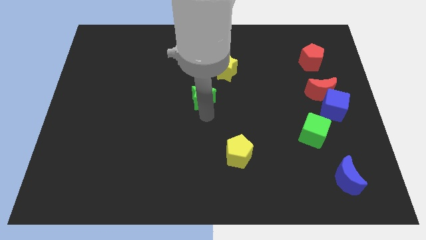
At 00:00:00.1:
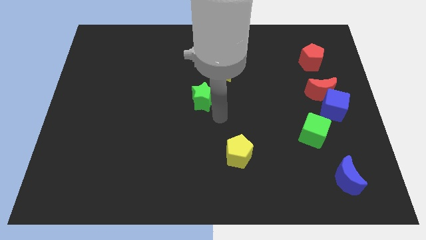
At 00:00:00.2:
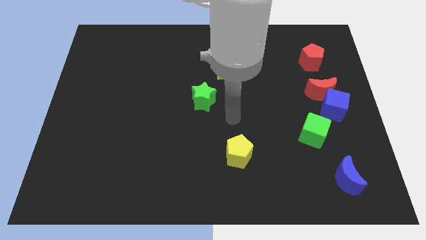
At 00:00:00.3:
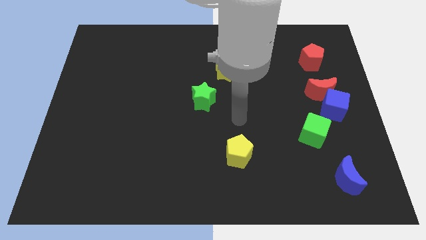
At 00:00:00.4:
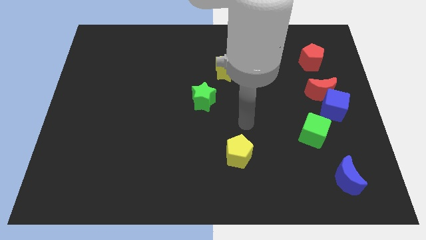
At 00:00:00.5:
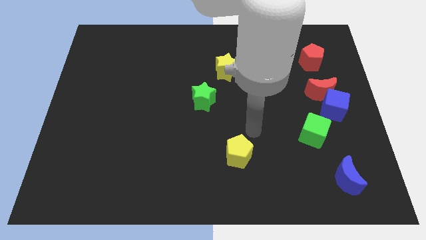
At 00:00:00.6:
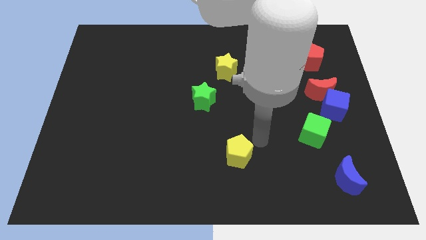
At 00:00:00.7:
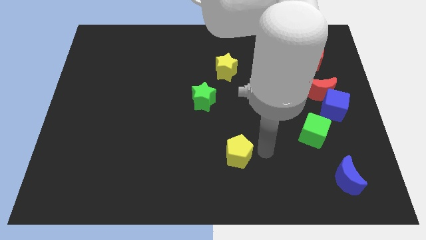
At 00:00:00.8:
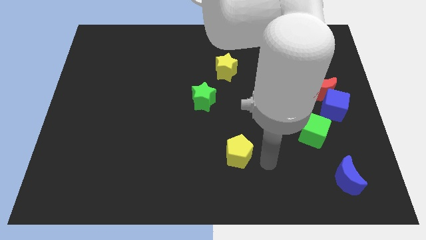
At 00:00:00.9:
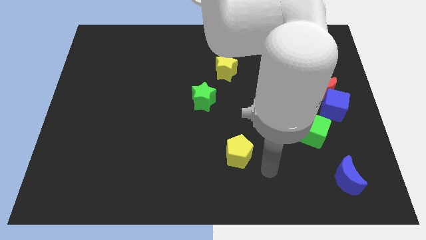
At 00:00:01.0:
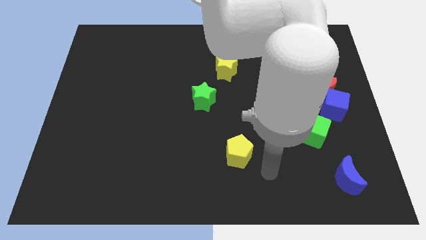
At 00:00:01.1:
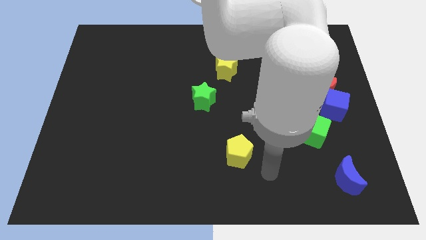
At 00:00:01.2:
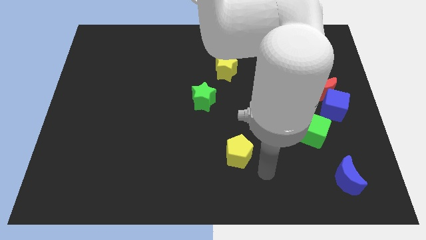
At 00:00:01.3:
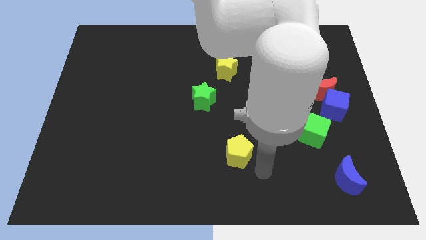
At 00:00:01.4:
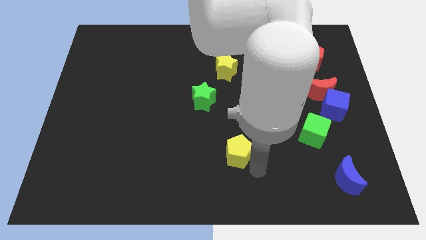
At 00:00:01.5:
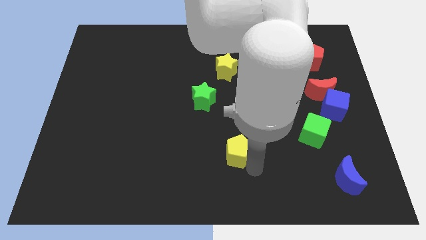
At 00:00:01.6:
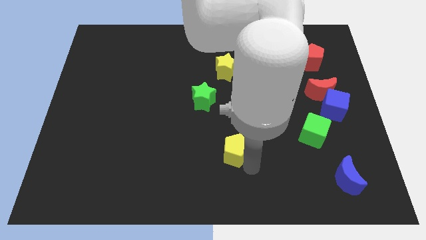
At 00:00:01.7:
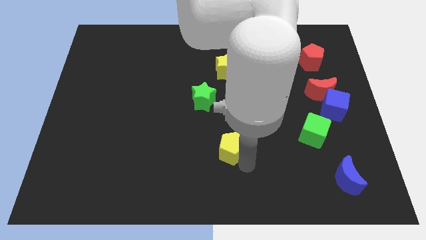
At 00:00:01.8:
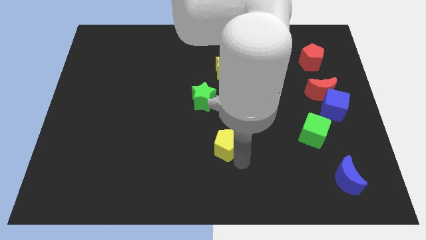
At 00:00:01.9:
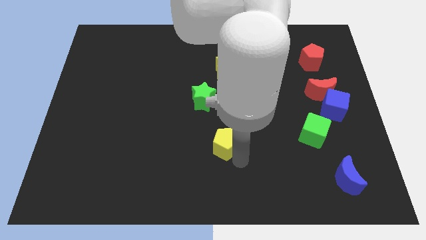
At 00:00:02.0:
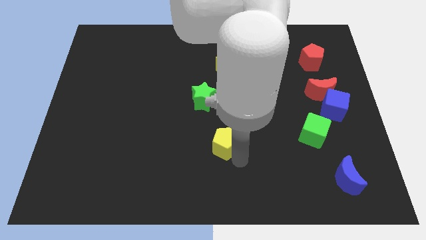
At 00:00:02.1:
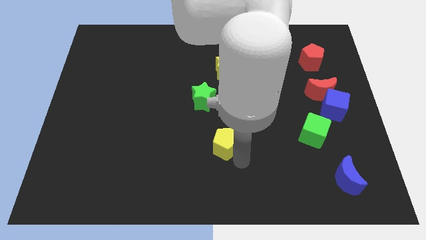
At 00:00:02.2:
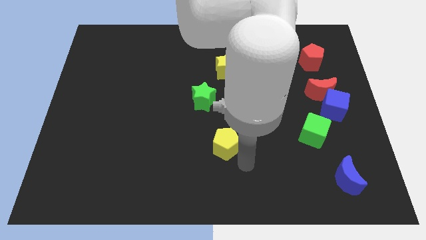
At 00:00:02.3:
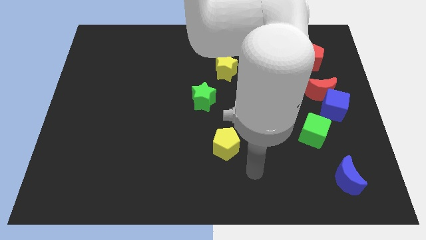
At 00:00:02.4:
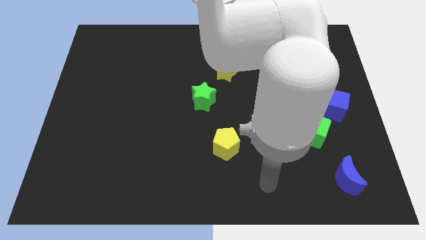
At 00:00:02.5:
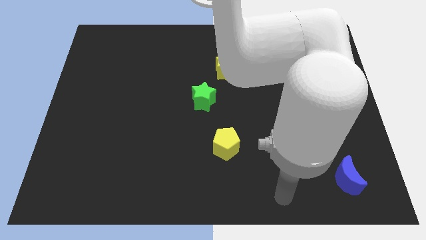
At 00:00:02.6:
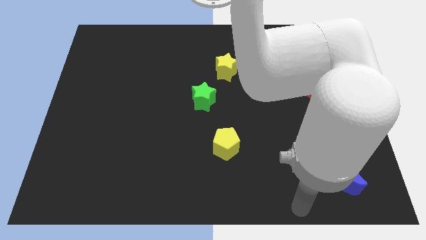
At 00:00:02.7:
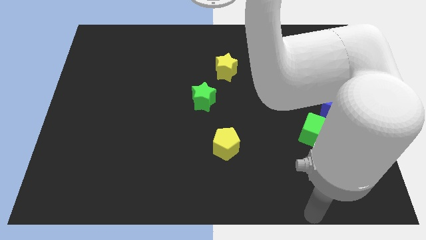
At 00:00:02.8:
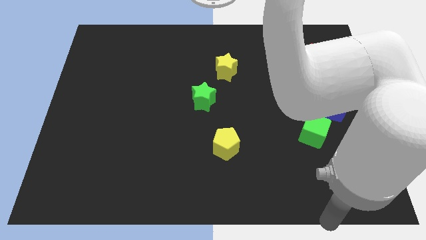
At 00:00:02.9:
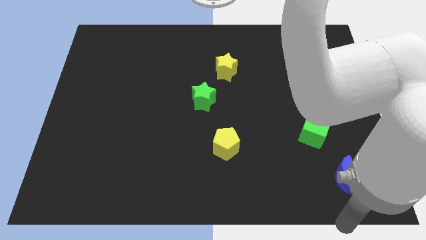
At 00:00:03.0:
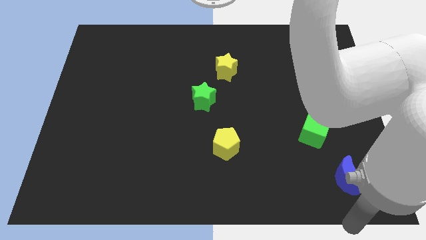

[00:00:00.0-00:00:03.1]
push the yellow pentagon slightly upward

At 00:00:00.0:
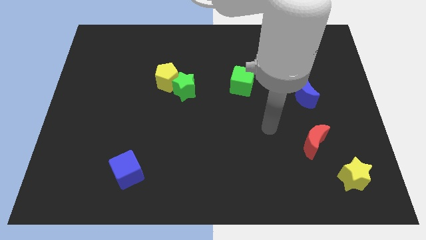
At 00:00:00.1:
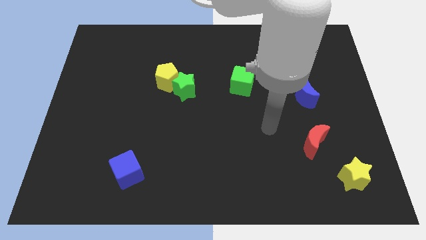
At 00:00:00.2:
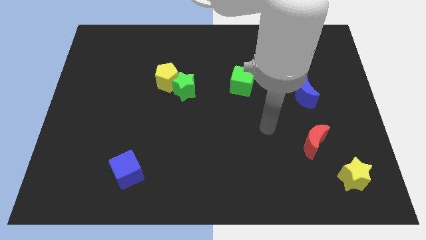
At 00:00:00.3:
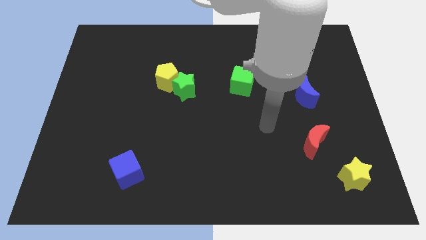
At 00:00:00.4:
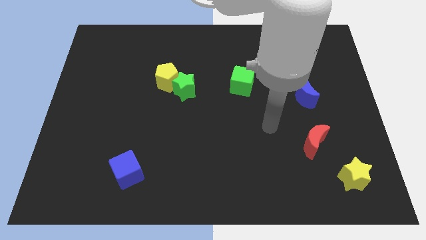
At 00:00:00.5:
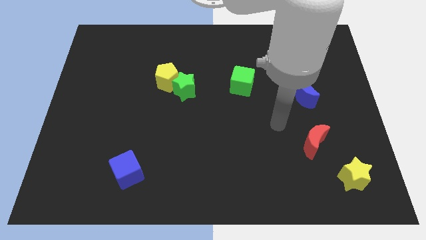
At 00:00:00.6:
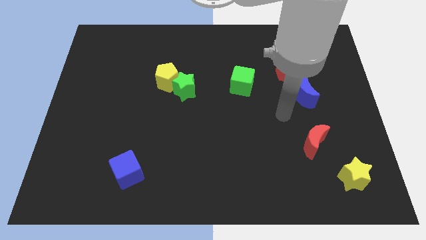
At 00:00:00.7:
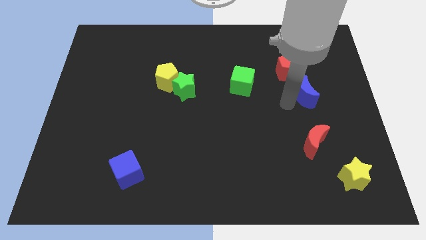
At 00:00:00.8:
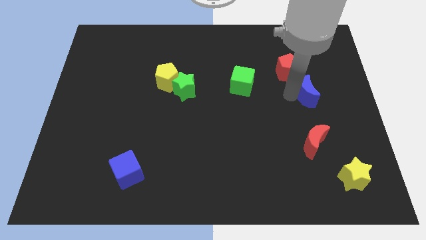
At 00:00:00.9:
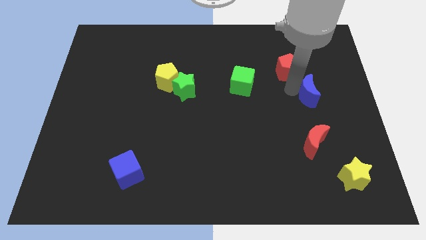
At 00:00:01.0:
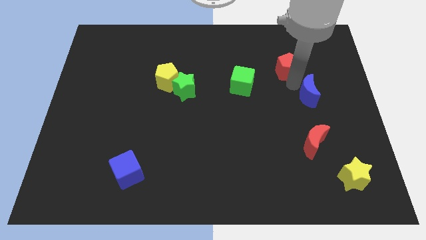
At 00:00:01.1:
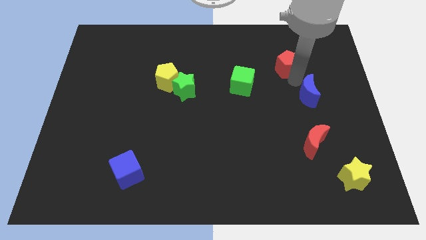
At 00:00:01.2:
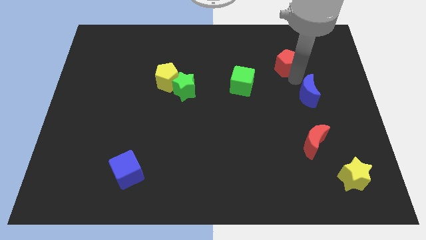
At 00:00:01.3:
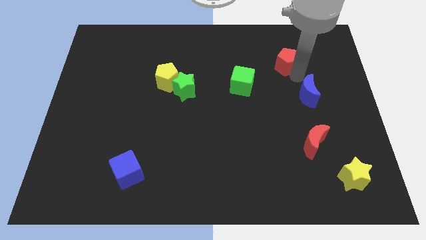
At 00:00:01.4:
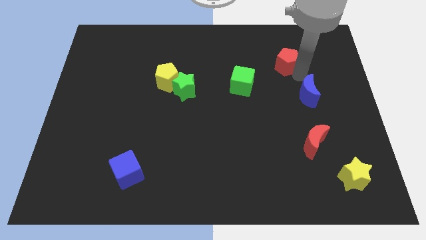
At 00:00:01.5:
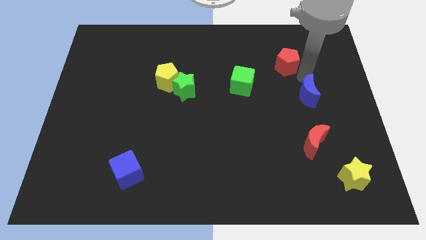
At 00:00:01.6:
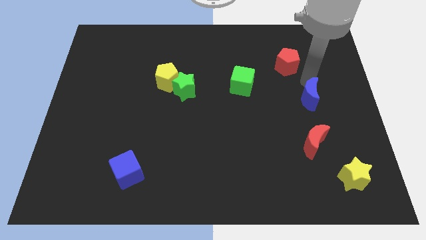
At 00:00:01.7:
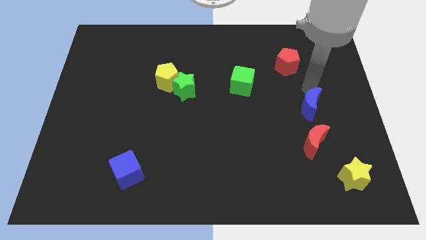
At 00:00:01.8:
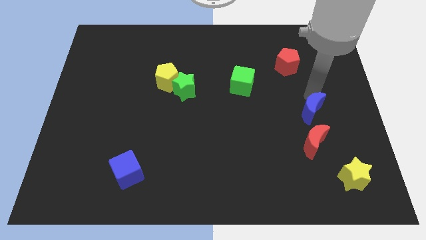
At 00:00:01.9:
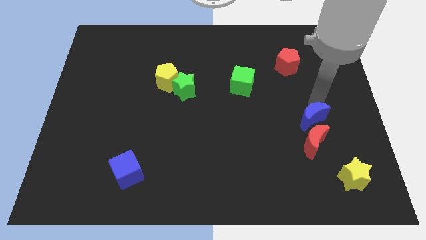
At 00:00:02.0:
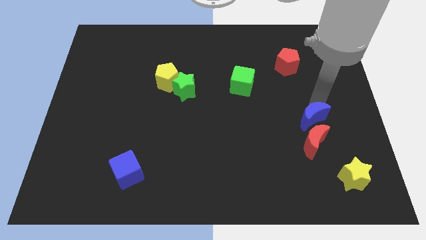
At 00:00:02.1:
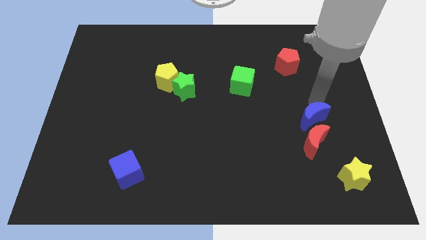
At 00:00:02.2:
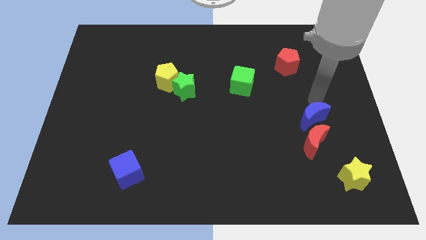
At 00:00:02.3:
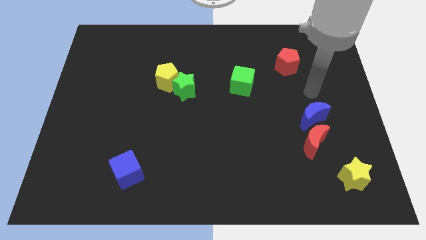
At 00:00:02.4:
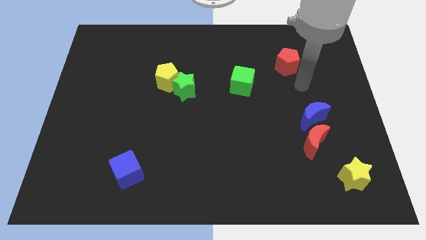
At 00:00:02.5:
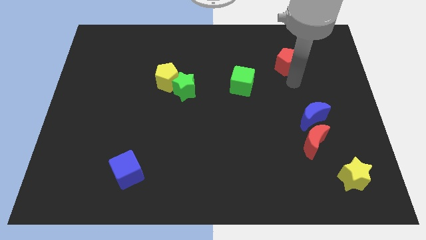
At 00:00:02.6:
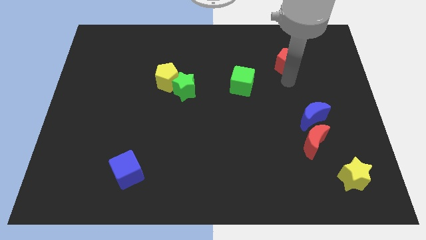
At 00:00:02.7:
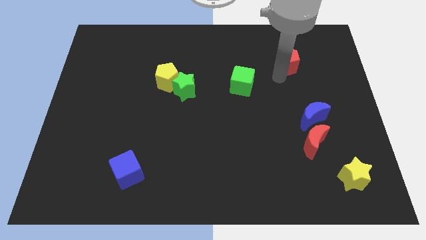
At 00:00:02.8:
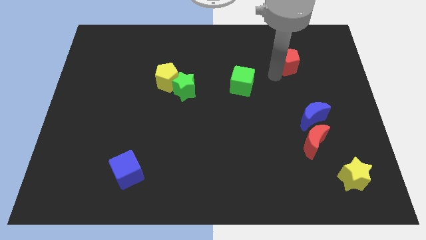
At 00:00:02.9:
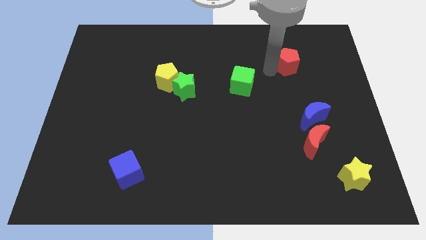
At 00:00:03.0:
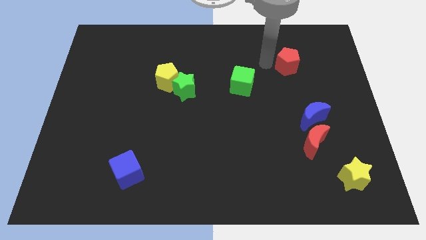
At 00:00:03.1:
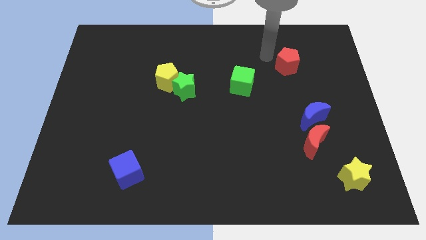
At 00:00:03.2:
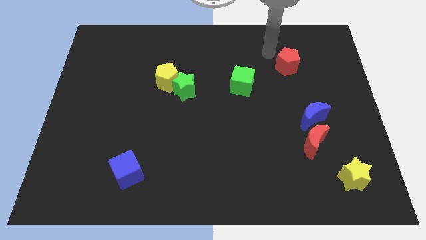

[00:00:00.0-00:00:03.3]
separate red pentagon and blue moon

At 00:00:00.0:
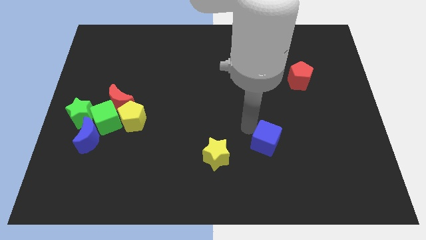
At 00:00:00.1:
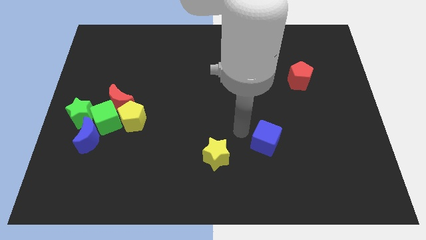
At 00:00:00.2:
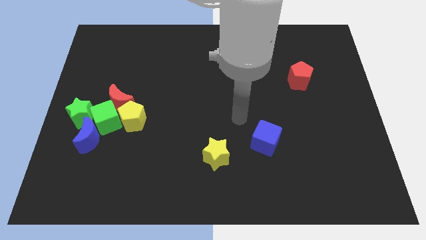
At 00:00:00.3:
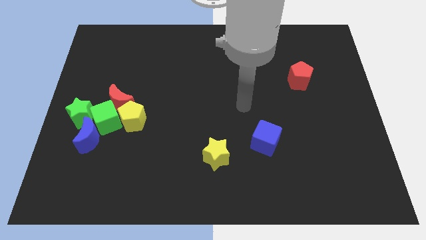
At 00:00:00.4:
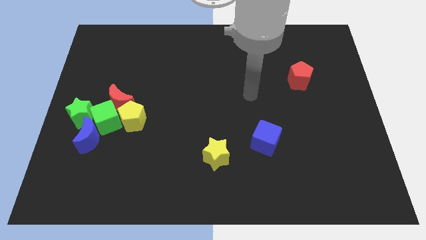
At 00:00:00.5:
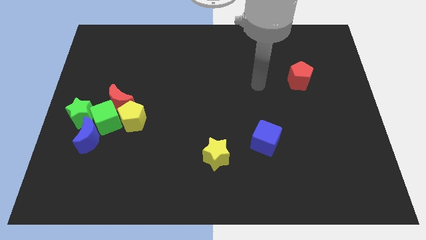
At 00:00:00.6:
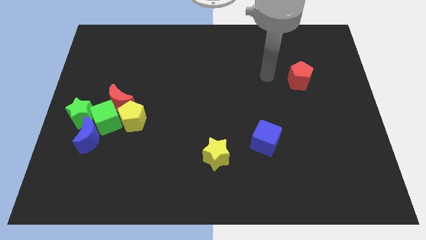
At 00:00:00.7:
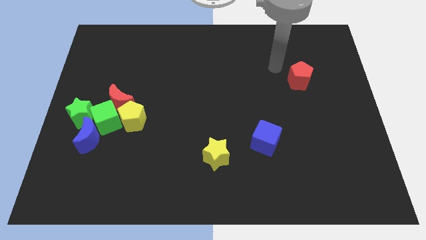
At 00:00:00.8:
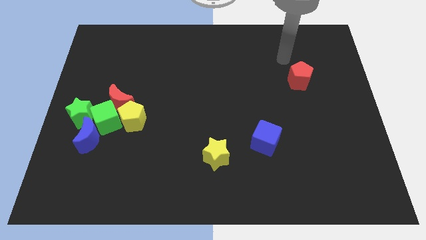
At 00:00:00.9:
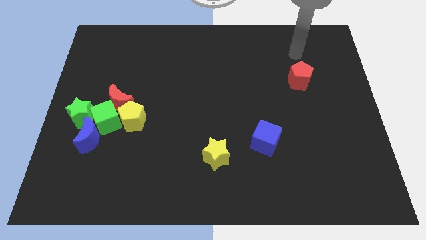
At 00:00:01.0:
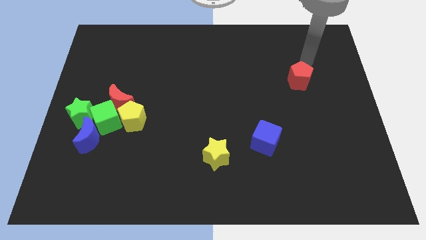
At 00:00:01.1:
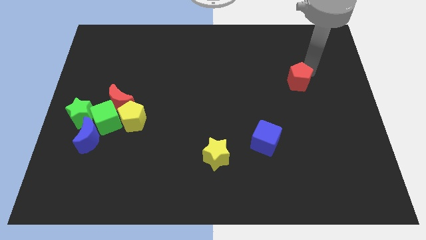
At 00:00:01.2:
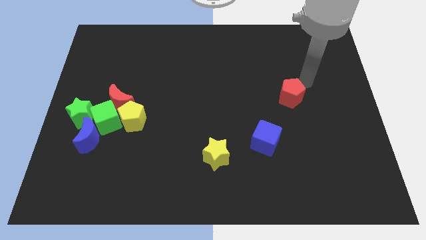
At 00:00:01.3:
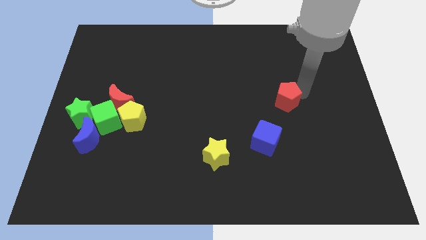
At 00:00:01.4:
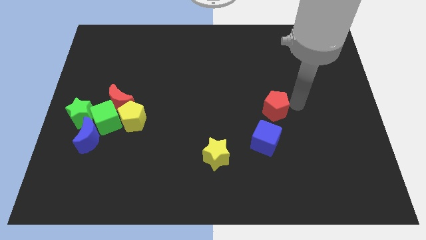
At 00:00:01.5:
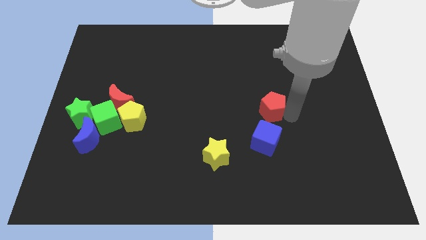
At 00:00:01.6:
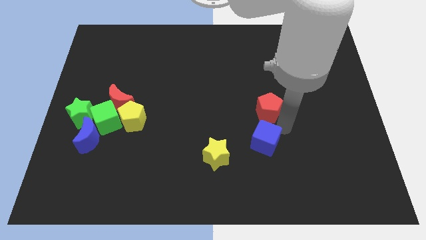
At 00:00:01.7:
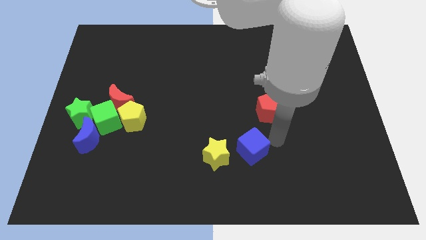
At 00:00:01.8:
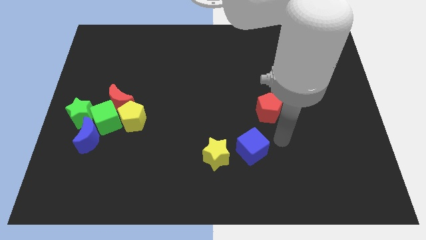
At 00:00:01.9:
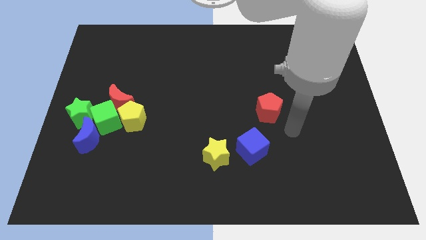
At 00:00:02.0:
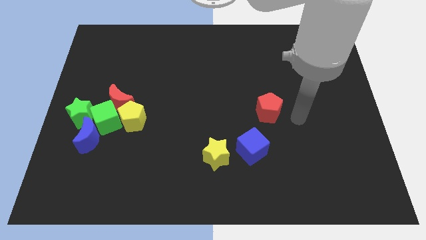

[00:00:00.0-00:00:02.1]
push the red pentagon close to the blue cube

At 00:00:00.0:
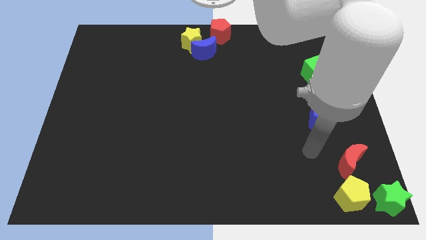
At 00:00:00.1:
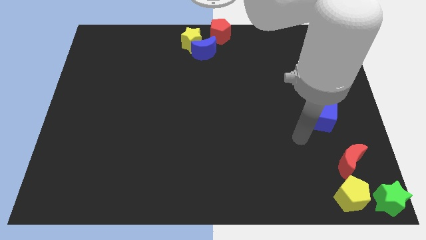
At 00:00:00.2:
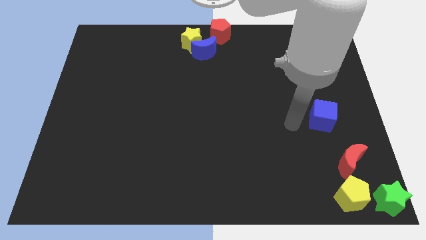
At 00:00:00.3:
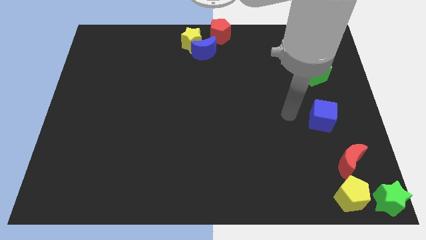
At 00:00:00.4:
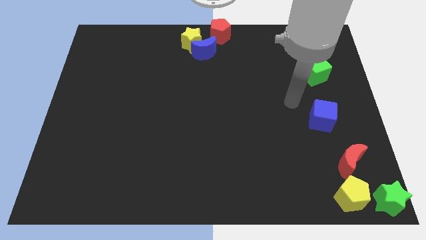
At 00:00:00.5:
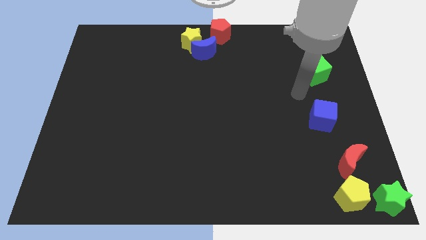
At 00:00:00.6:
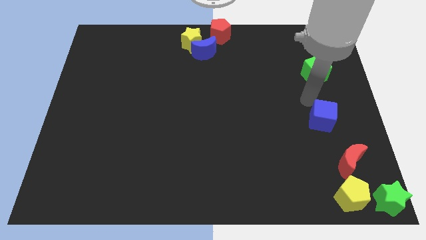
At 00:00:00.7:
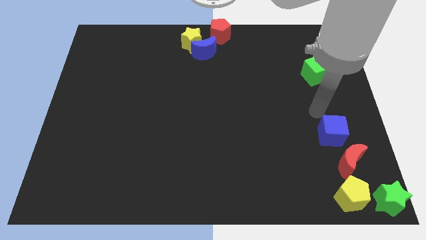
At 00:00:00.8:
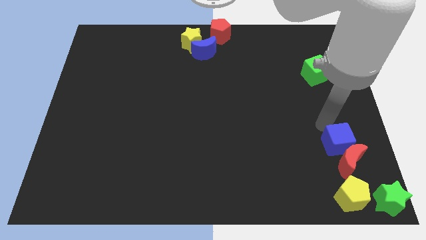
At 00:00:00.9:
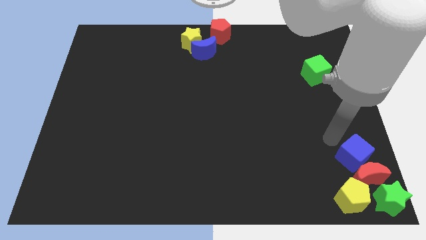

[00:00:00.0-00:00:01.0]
push the blue cube into the red moon
